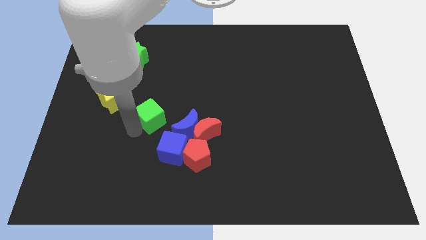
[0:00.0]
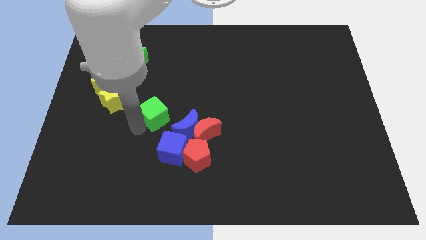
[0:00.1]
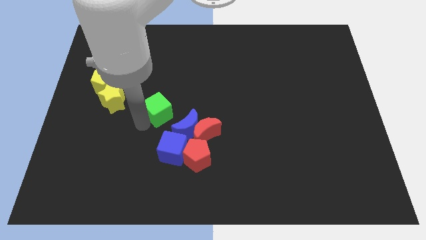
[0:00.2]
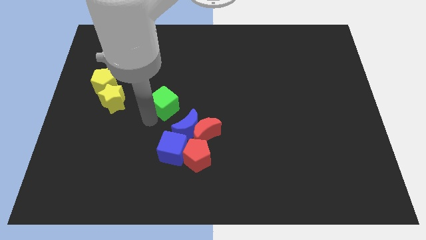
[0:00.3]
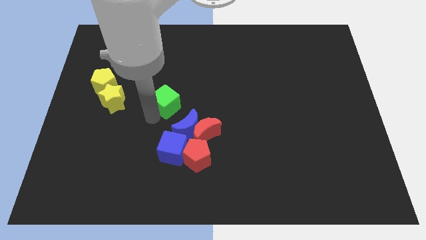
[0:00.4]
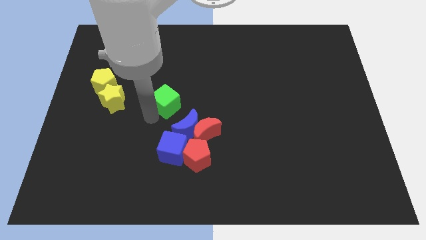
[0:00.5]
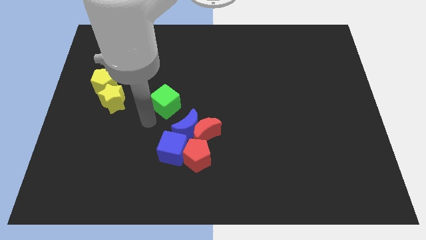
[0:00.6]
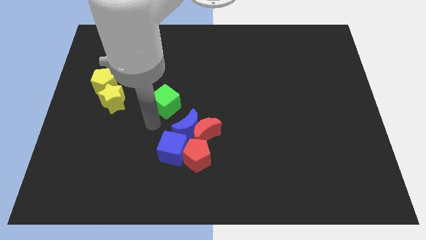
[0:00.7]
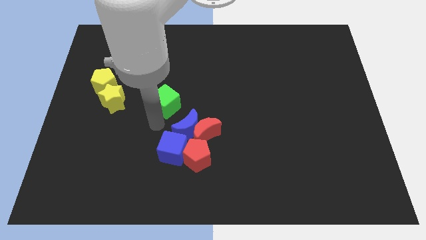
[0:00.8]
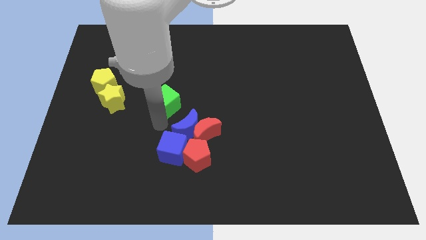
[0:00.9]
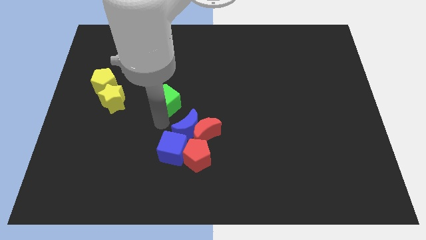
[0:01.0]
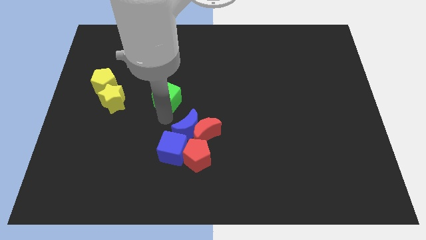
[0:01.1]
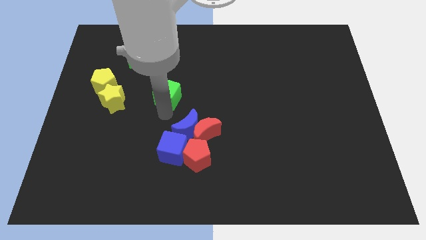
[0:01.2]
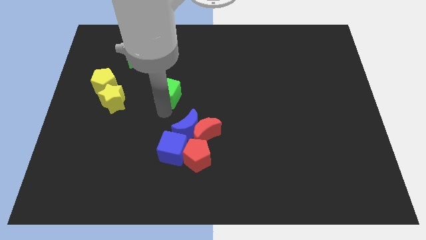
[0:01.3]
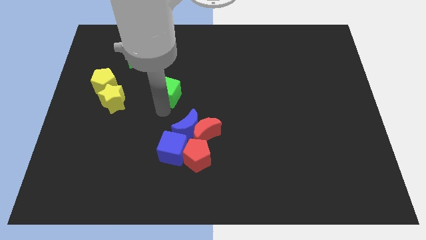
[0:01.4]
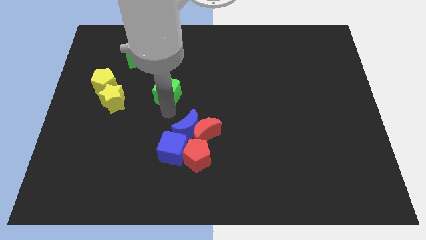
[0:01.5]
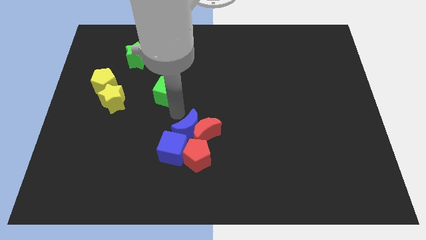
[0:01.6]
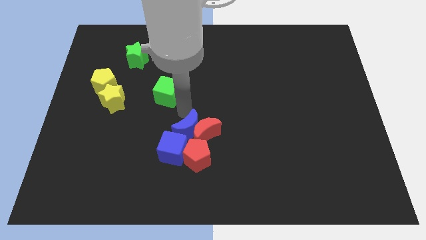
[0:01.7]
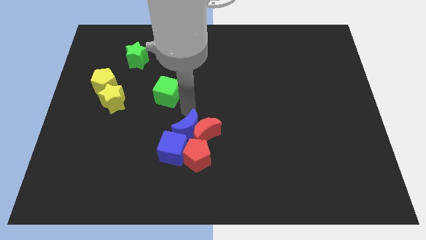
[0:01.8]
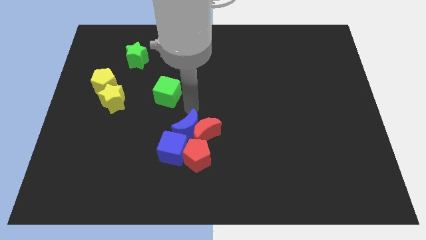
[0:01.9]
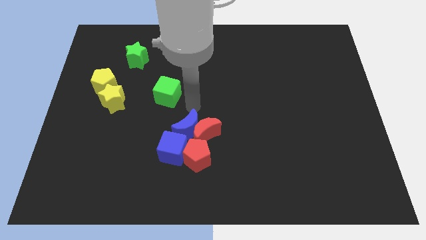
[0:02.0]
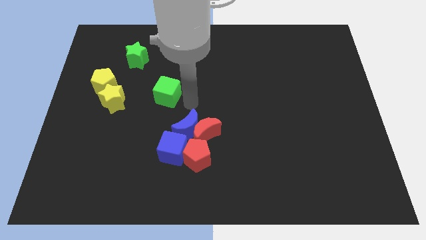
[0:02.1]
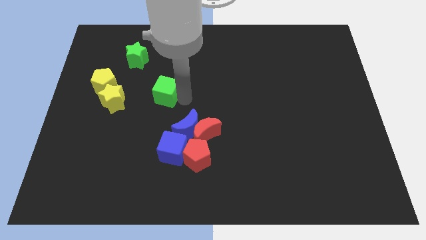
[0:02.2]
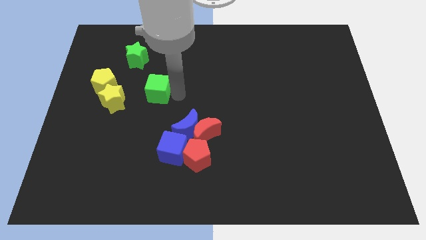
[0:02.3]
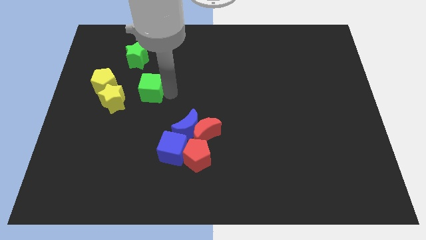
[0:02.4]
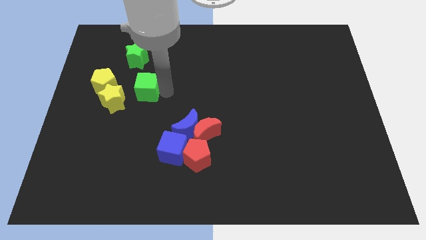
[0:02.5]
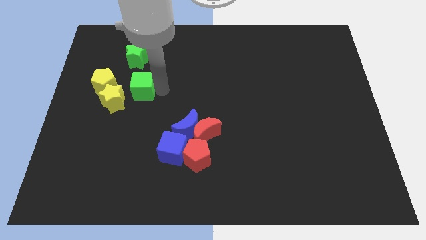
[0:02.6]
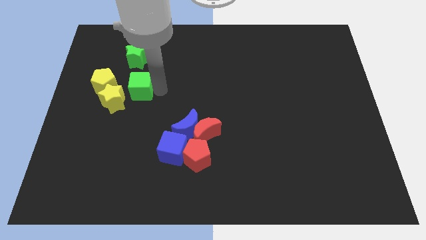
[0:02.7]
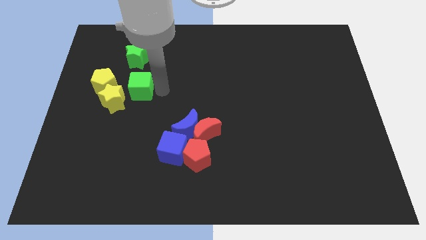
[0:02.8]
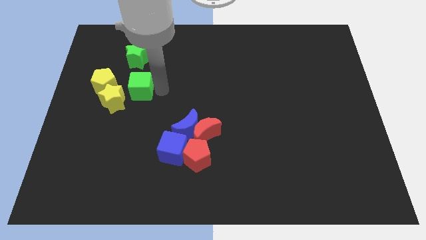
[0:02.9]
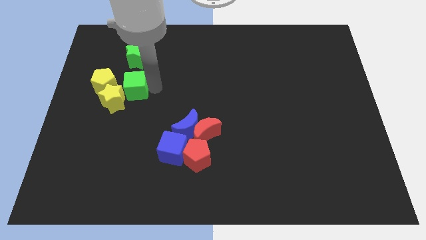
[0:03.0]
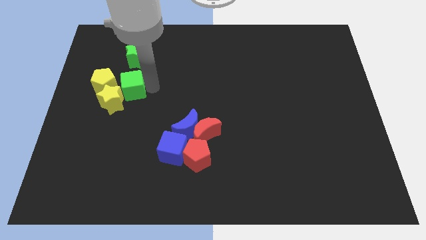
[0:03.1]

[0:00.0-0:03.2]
push green cube below green star

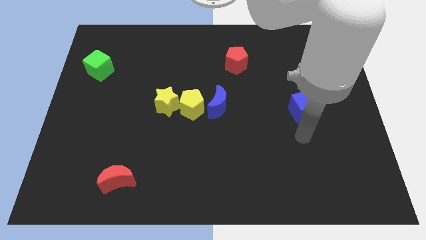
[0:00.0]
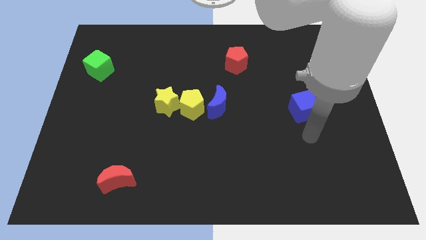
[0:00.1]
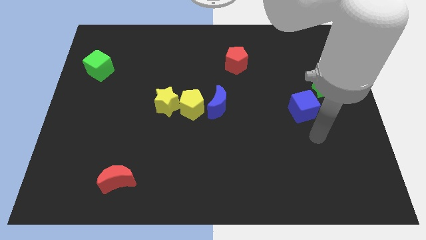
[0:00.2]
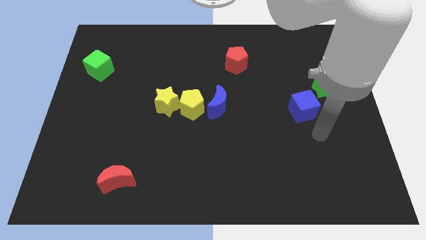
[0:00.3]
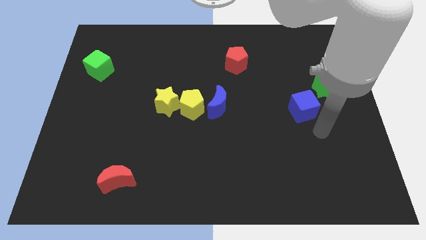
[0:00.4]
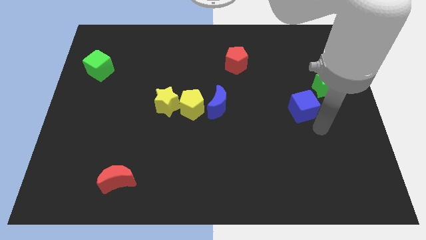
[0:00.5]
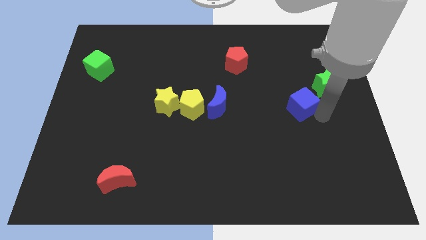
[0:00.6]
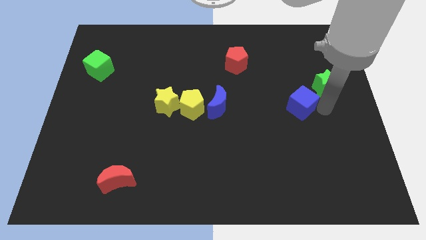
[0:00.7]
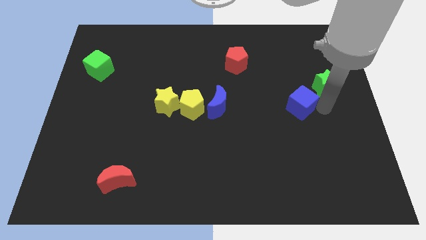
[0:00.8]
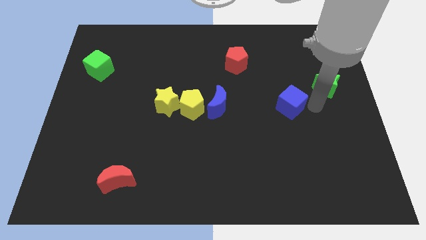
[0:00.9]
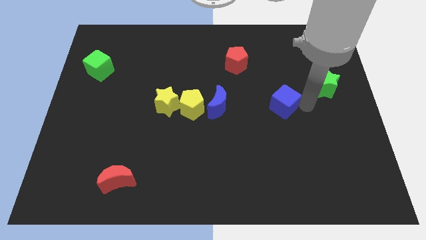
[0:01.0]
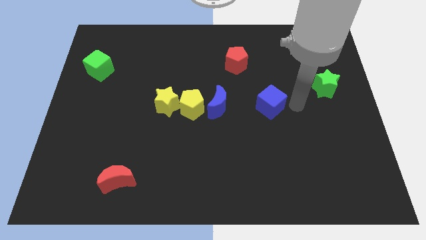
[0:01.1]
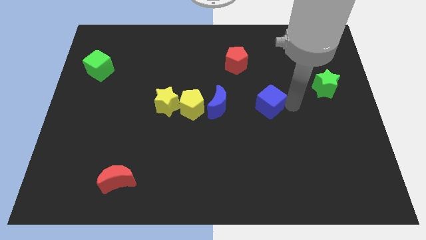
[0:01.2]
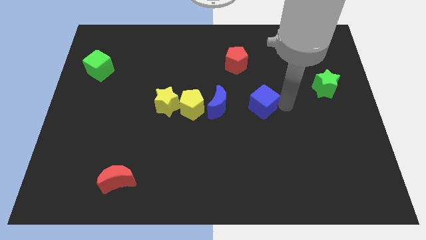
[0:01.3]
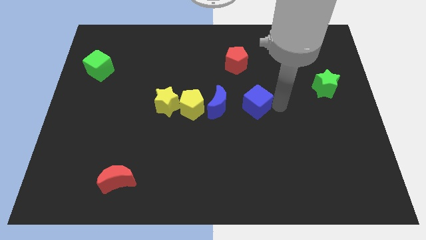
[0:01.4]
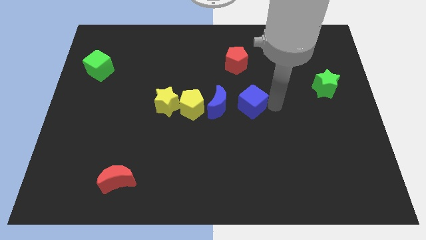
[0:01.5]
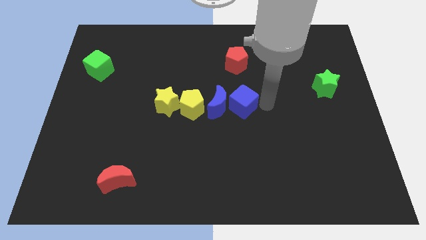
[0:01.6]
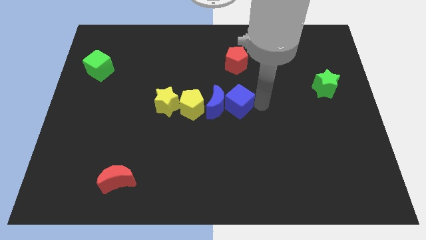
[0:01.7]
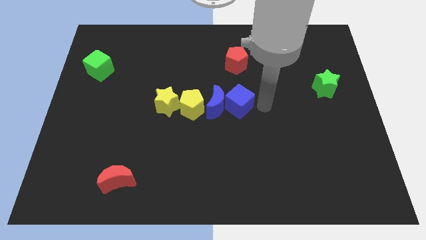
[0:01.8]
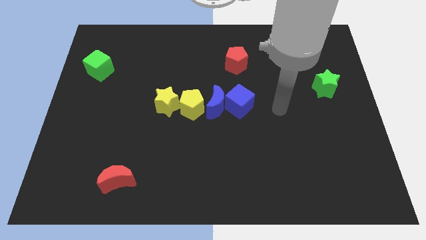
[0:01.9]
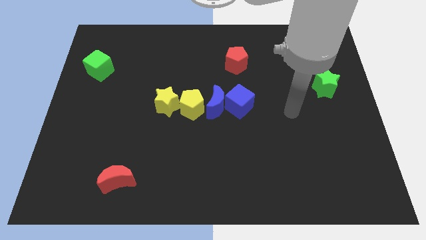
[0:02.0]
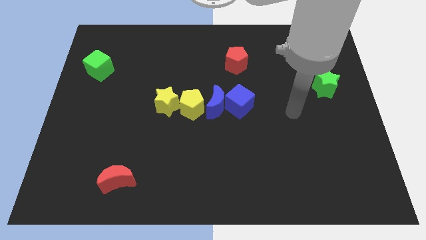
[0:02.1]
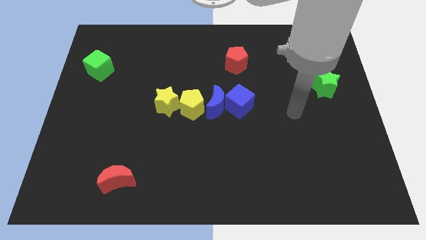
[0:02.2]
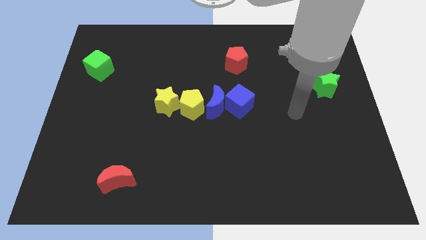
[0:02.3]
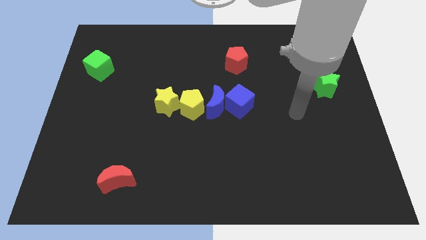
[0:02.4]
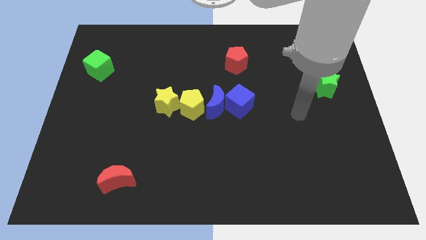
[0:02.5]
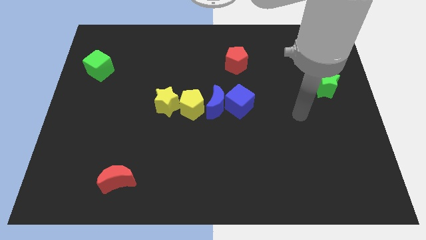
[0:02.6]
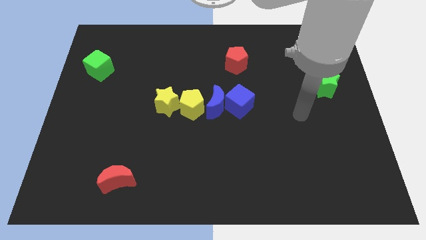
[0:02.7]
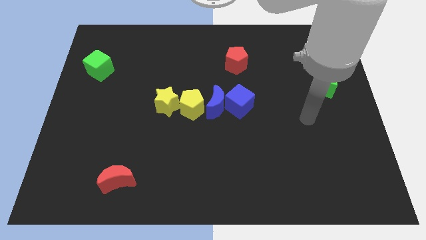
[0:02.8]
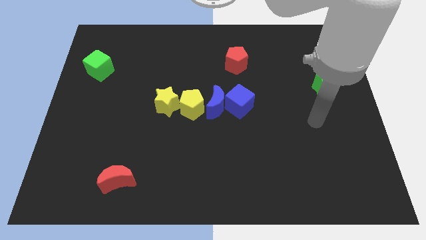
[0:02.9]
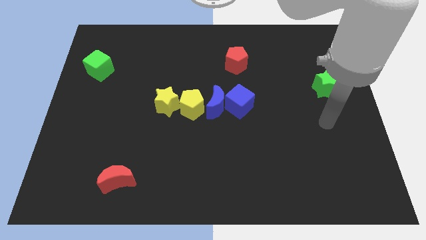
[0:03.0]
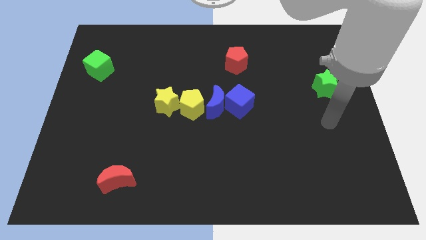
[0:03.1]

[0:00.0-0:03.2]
put the blue cube at the center of the blue moon

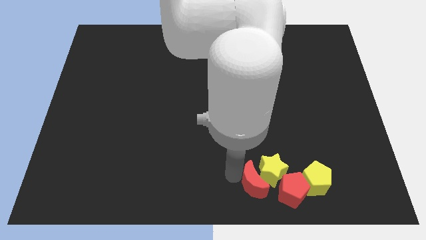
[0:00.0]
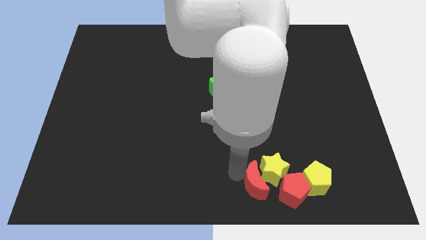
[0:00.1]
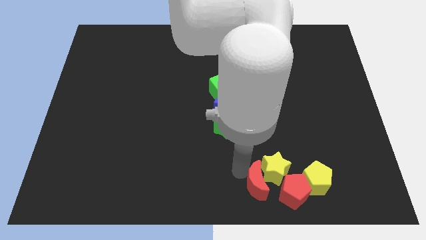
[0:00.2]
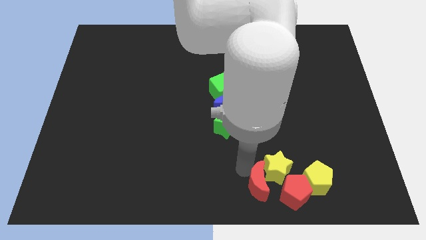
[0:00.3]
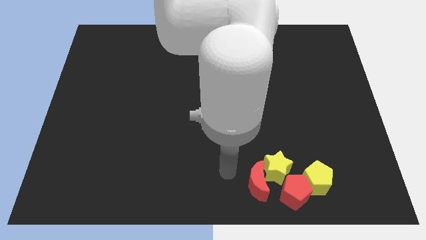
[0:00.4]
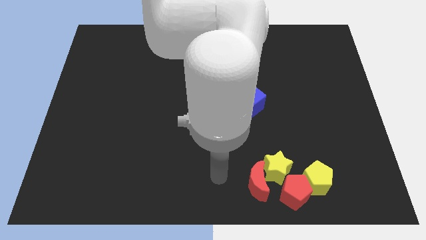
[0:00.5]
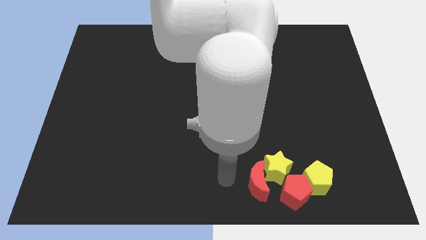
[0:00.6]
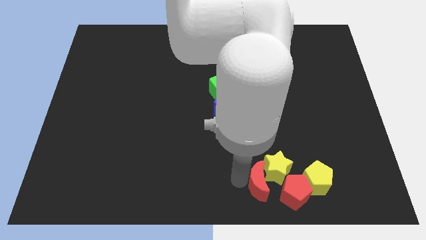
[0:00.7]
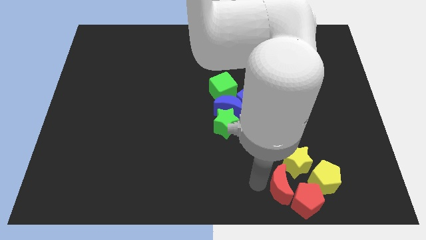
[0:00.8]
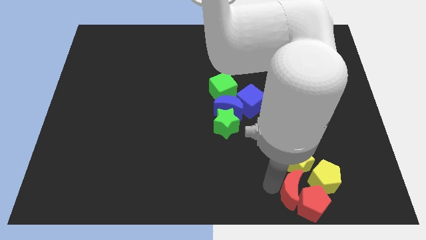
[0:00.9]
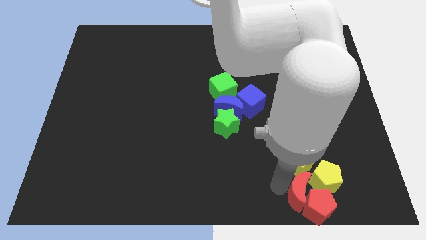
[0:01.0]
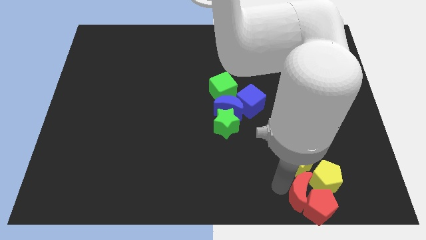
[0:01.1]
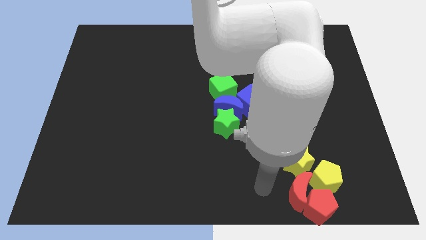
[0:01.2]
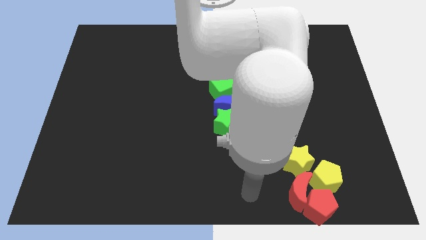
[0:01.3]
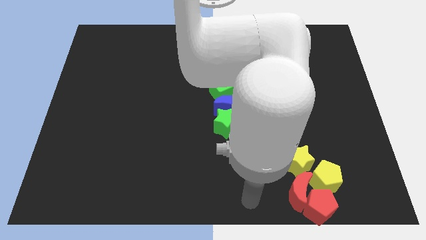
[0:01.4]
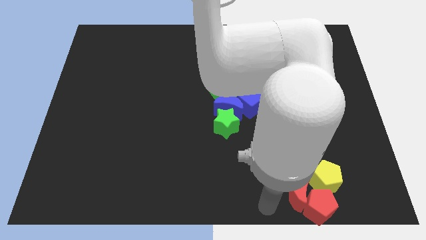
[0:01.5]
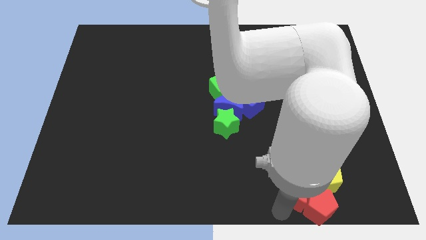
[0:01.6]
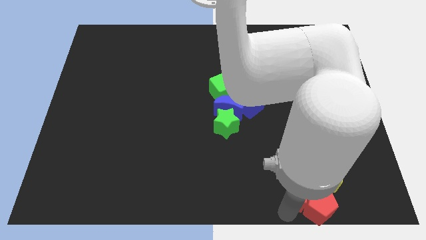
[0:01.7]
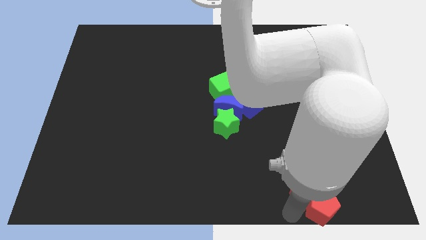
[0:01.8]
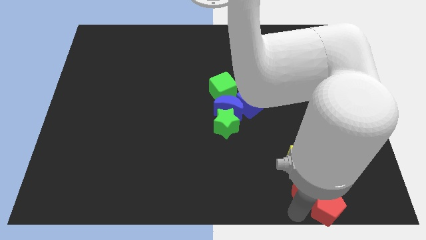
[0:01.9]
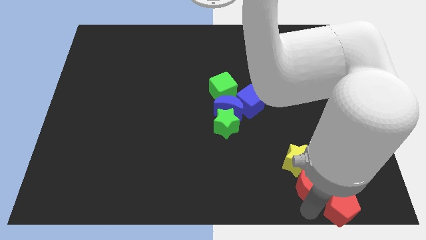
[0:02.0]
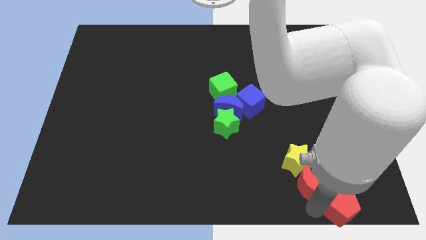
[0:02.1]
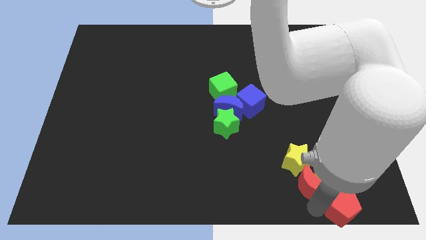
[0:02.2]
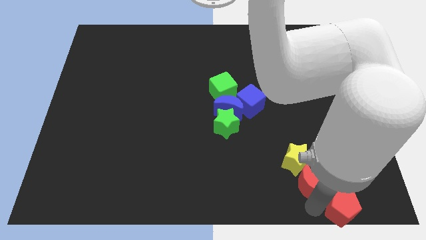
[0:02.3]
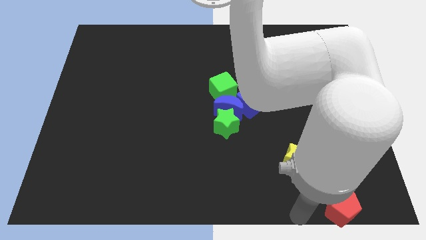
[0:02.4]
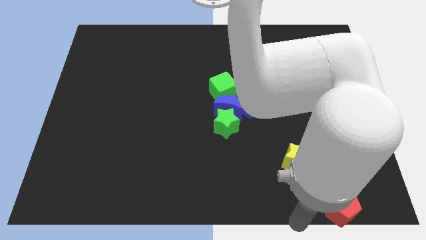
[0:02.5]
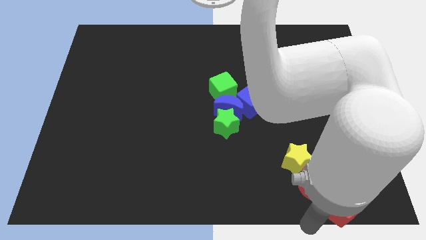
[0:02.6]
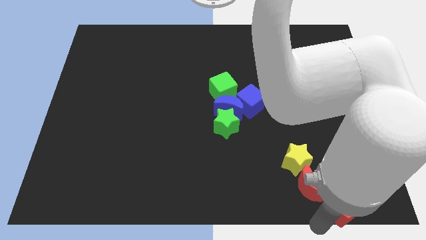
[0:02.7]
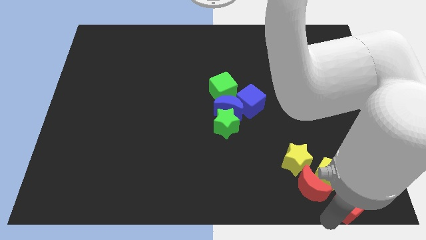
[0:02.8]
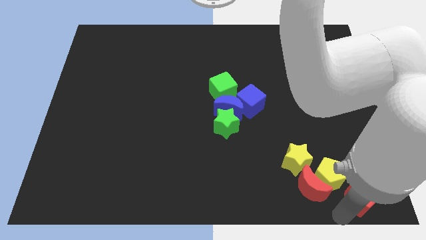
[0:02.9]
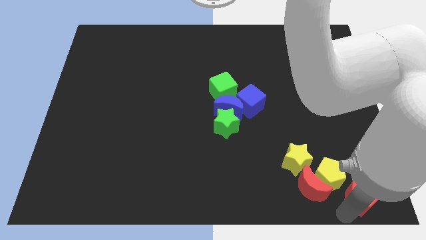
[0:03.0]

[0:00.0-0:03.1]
slide the red moon into the red pentagon
